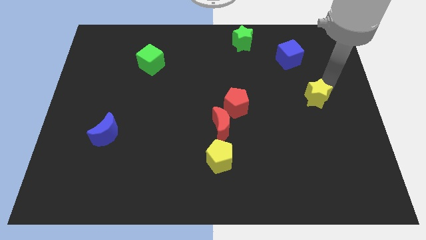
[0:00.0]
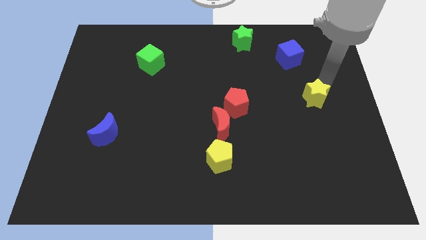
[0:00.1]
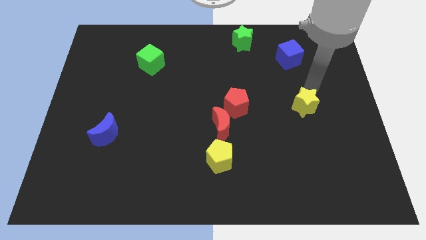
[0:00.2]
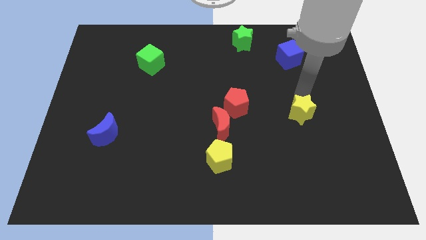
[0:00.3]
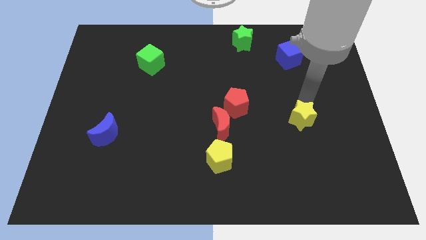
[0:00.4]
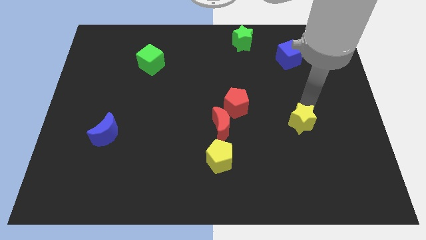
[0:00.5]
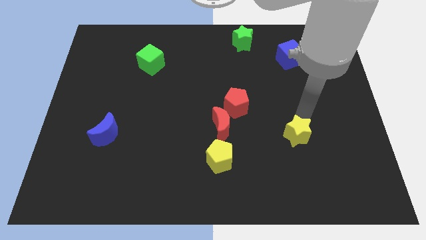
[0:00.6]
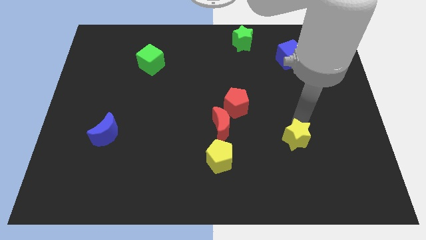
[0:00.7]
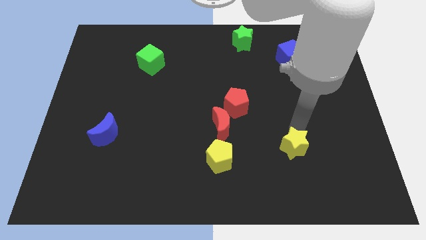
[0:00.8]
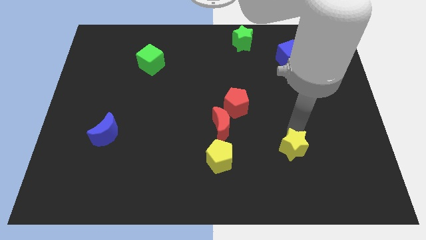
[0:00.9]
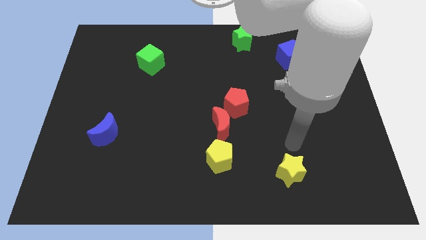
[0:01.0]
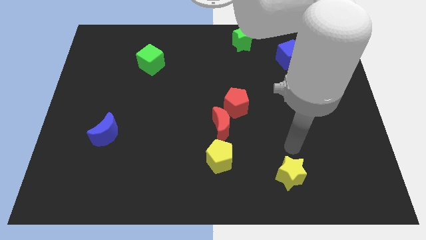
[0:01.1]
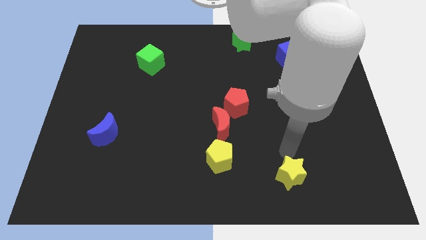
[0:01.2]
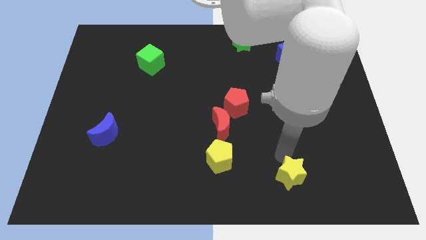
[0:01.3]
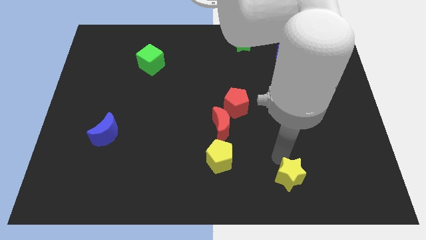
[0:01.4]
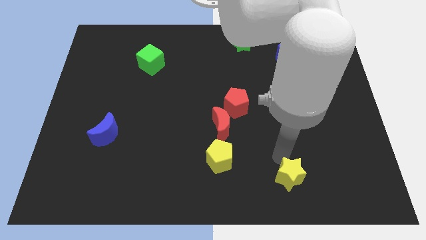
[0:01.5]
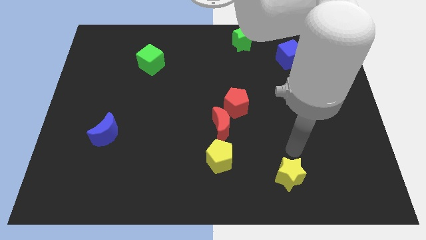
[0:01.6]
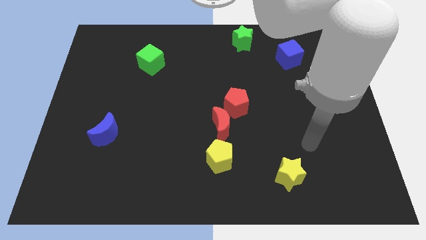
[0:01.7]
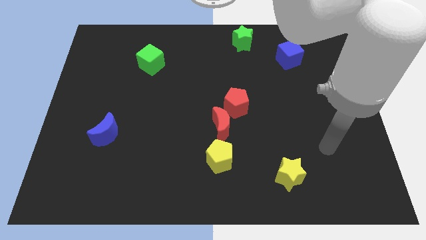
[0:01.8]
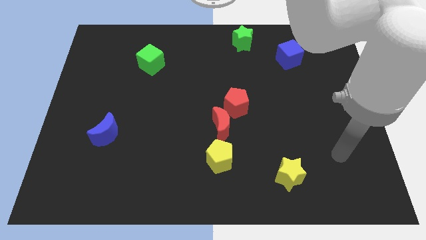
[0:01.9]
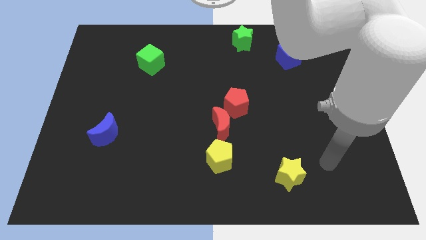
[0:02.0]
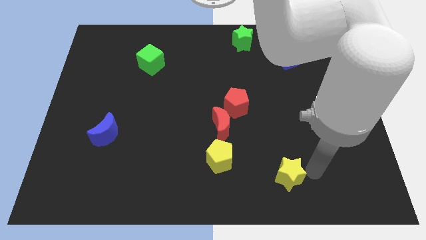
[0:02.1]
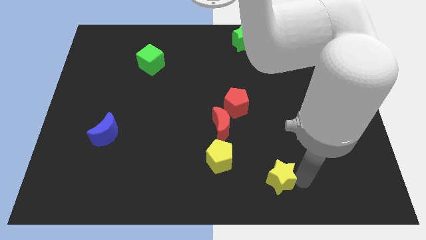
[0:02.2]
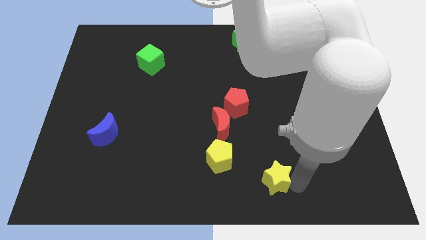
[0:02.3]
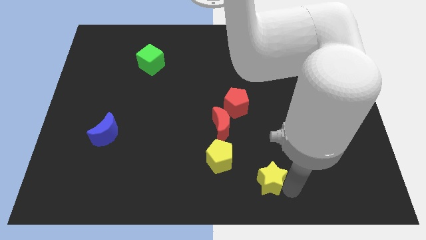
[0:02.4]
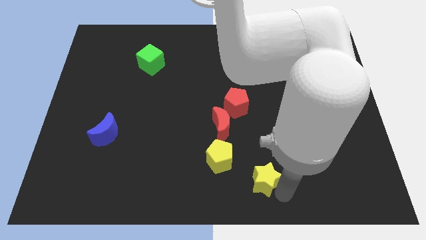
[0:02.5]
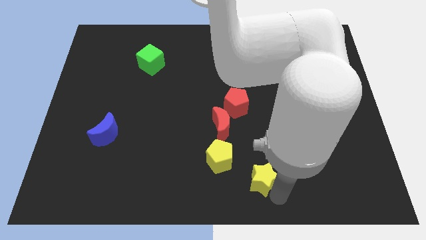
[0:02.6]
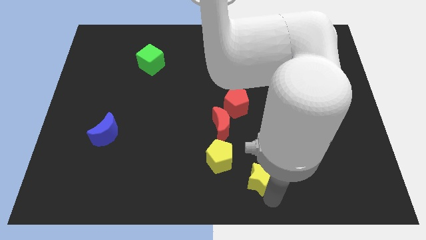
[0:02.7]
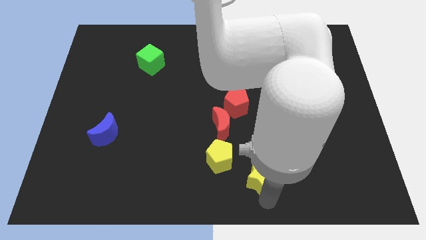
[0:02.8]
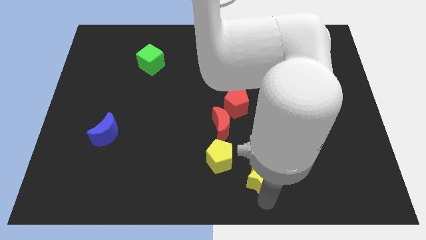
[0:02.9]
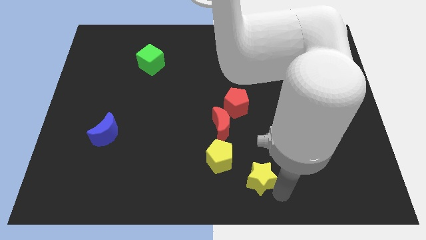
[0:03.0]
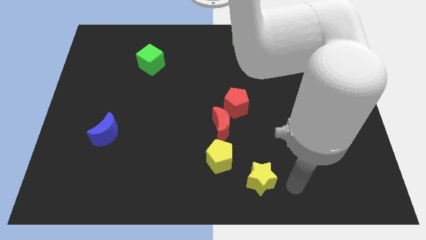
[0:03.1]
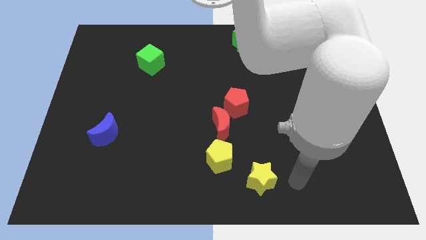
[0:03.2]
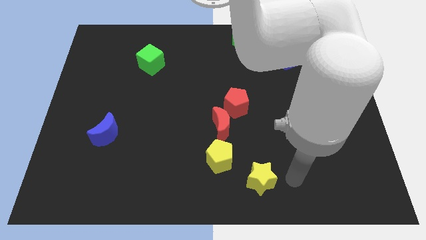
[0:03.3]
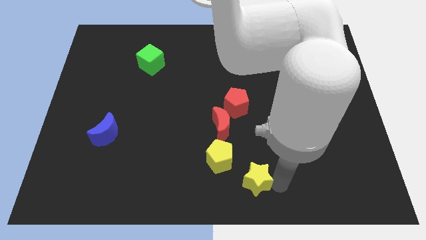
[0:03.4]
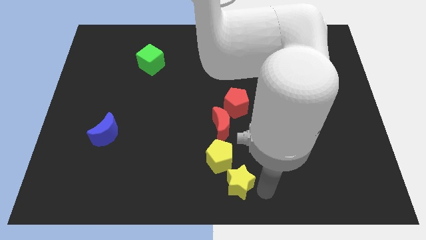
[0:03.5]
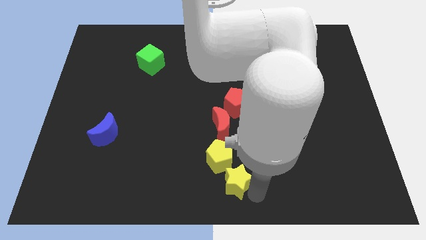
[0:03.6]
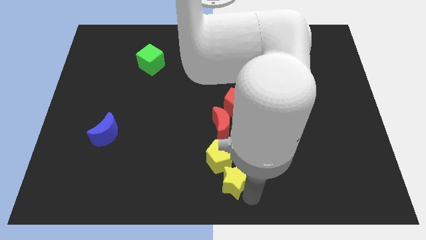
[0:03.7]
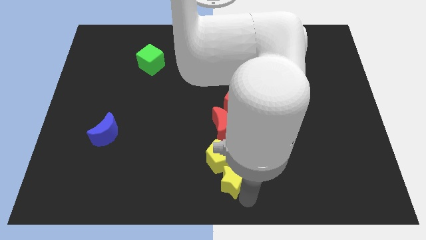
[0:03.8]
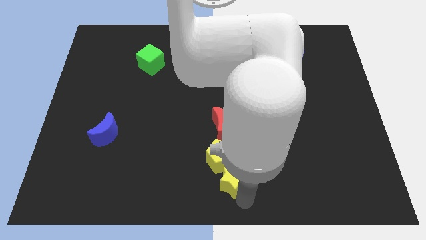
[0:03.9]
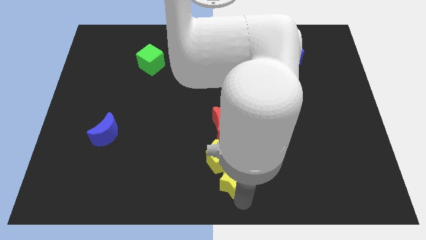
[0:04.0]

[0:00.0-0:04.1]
place yellow star to the bottom right of yellow pentagon

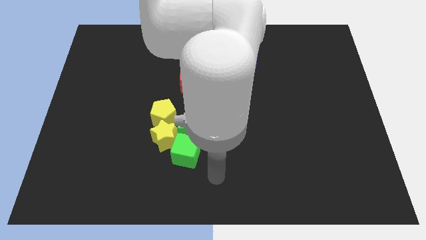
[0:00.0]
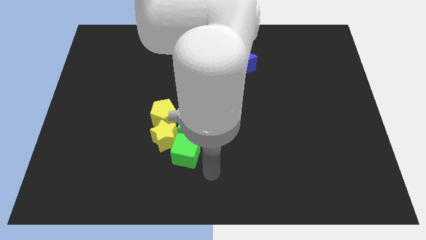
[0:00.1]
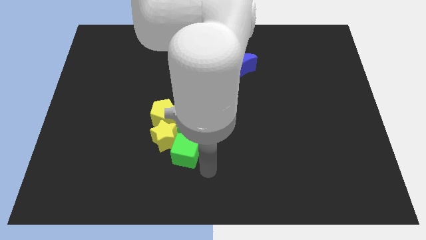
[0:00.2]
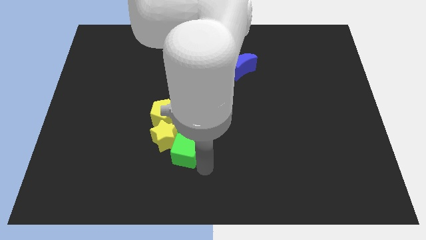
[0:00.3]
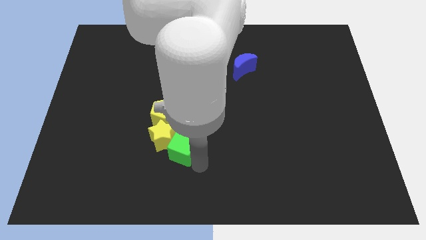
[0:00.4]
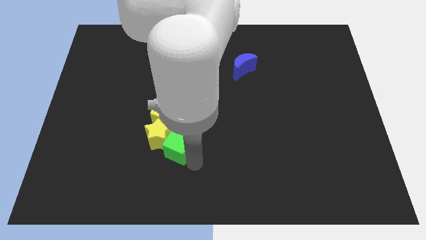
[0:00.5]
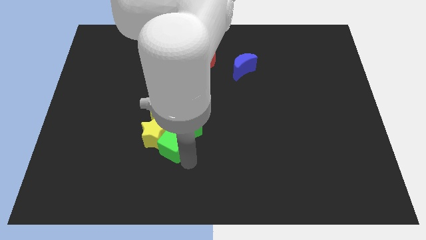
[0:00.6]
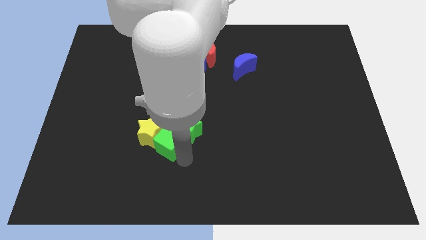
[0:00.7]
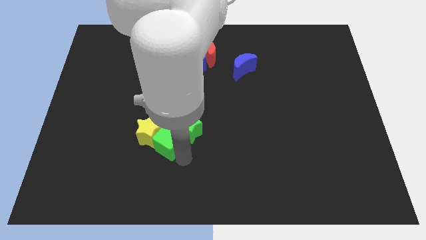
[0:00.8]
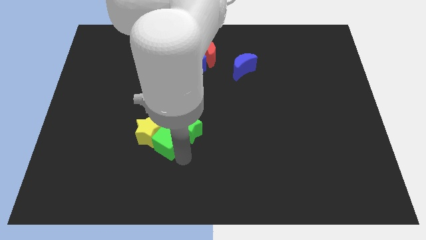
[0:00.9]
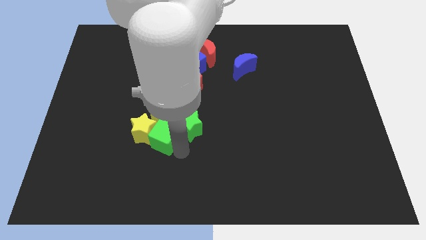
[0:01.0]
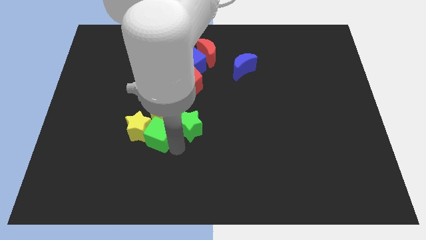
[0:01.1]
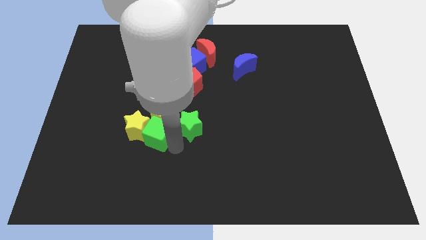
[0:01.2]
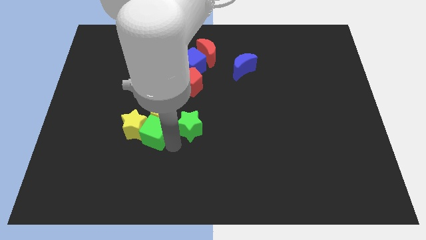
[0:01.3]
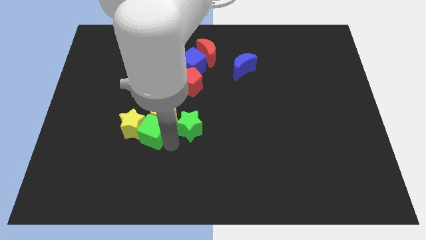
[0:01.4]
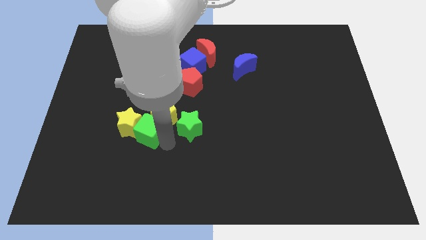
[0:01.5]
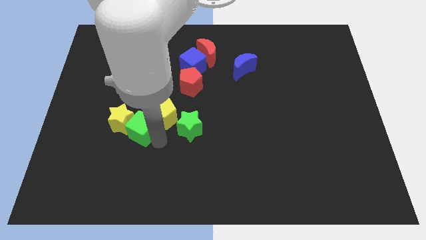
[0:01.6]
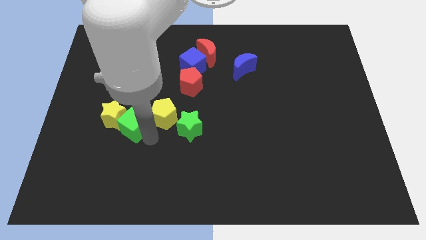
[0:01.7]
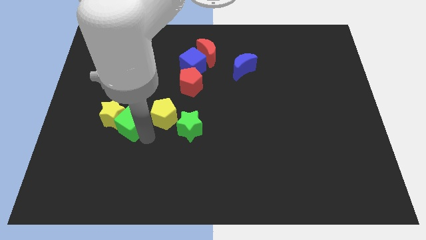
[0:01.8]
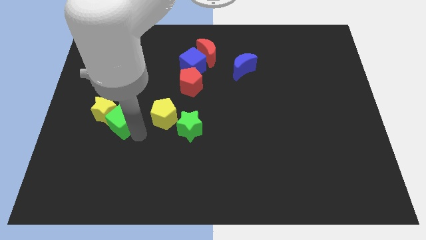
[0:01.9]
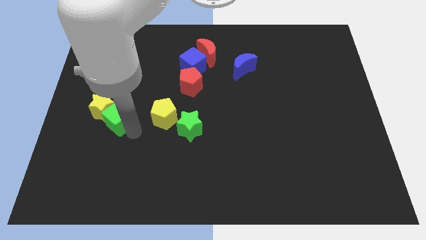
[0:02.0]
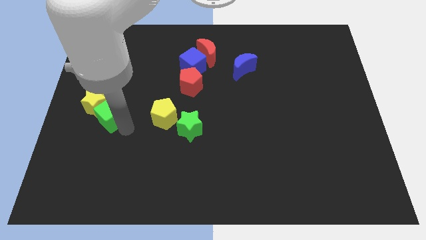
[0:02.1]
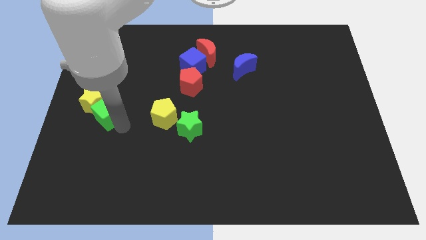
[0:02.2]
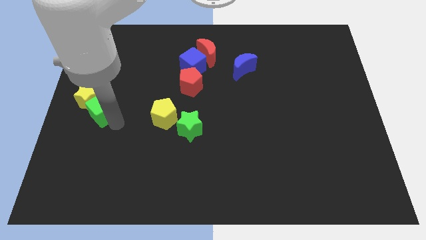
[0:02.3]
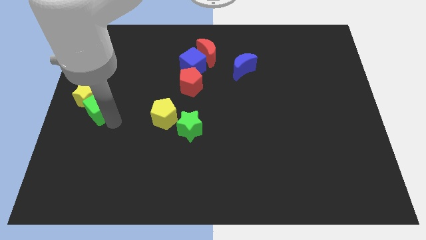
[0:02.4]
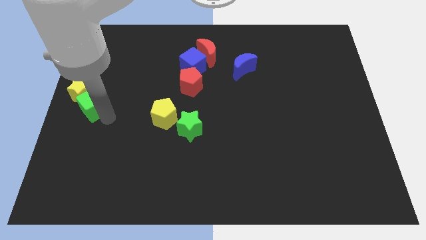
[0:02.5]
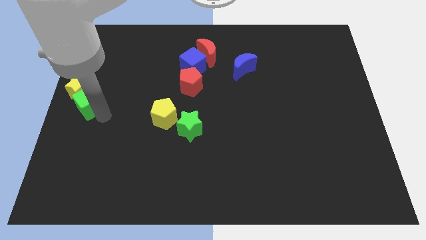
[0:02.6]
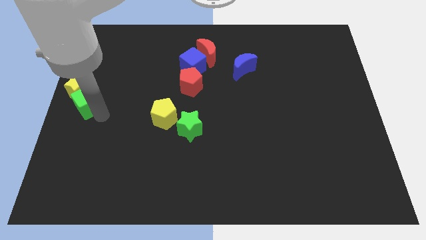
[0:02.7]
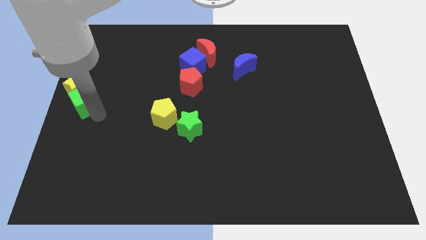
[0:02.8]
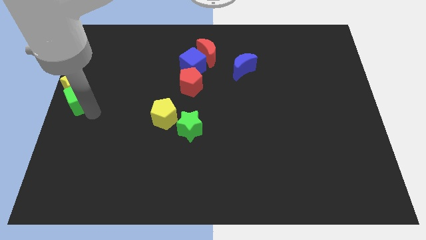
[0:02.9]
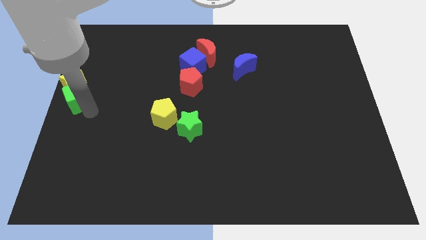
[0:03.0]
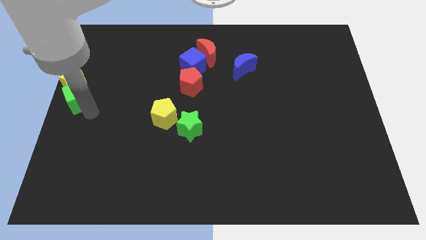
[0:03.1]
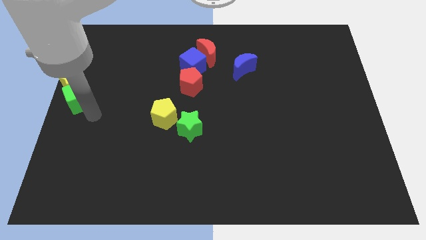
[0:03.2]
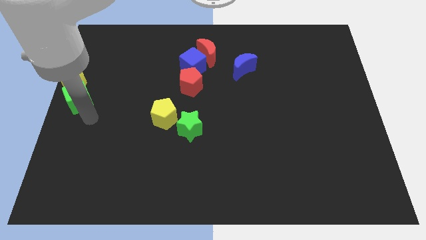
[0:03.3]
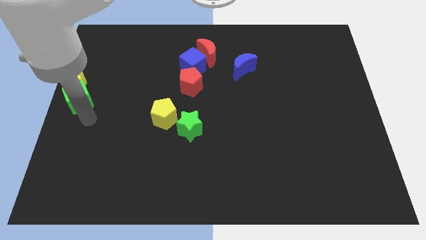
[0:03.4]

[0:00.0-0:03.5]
push green star towards left up

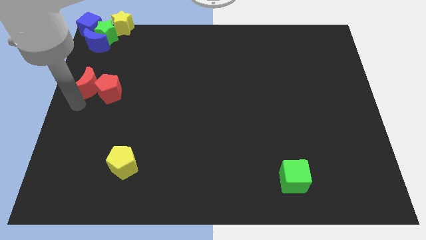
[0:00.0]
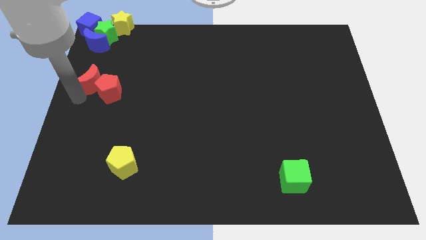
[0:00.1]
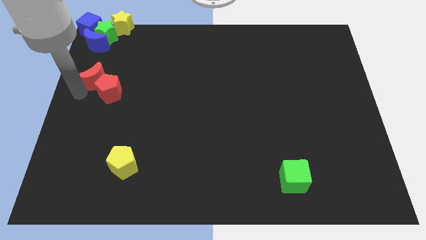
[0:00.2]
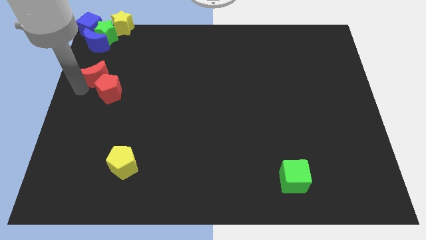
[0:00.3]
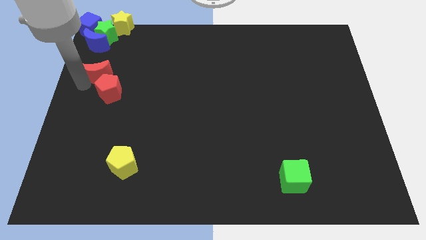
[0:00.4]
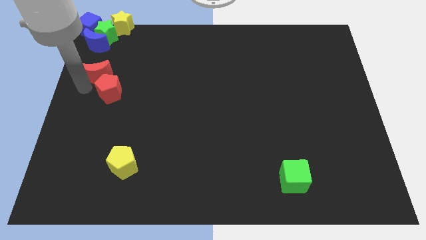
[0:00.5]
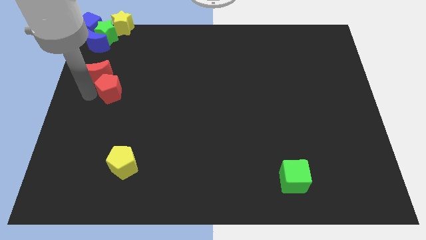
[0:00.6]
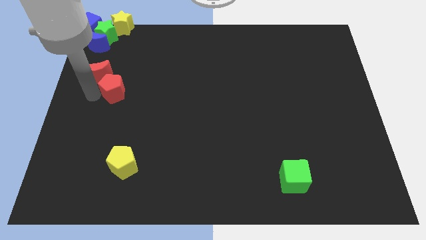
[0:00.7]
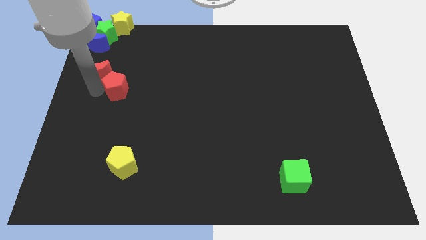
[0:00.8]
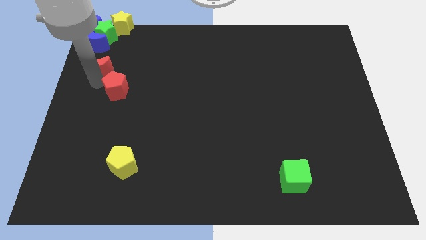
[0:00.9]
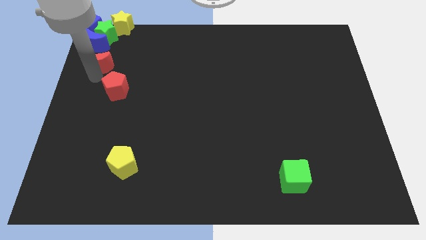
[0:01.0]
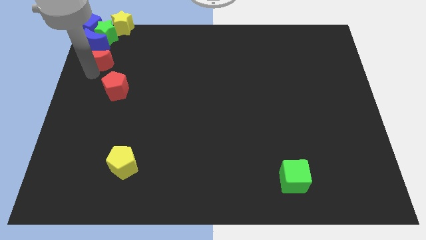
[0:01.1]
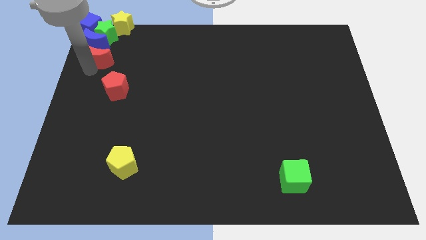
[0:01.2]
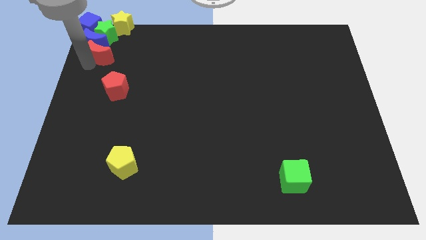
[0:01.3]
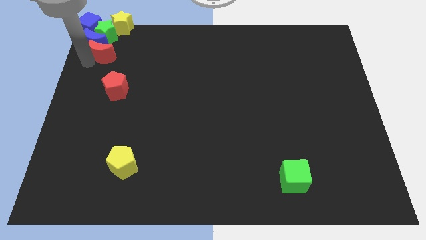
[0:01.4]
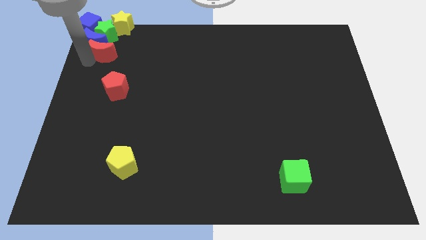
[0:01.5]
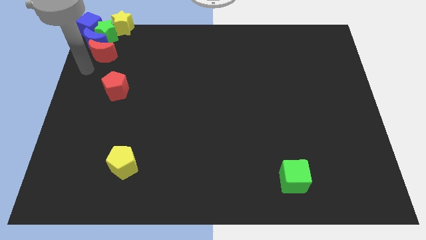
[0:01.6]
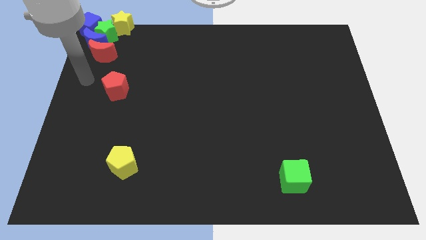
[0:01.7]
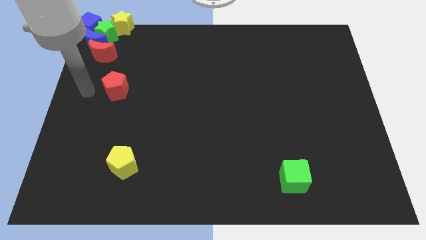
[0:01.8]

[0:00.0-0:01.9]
separate the red moon from the red pentagon
